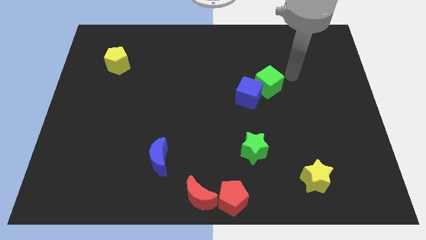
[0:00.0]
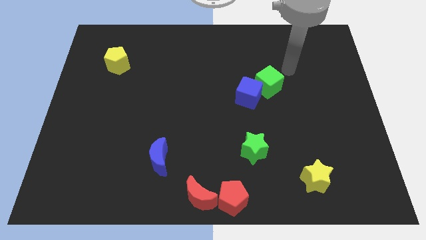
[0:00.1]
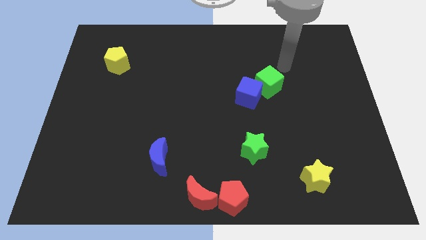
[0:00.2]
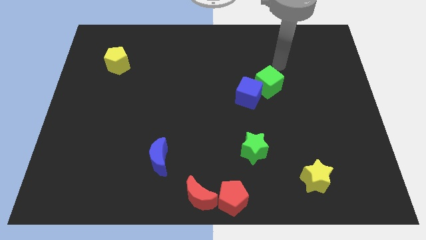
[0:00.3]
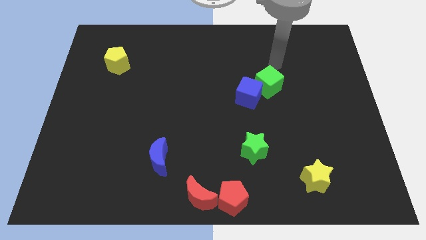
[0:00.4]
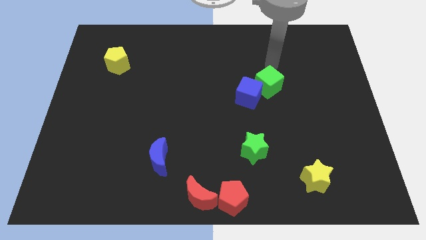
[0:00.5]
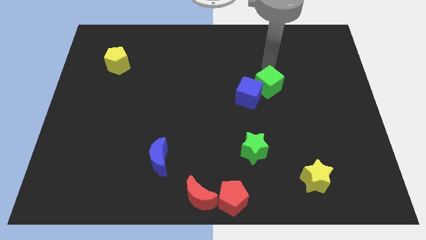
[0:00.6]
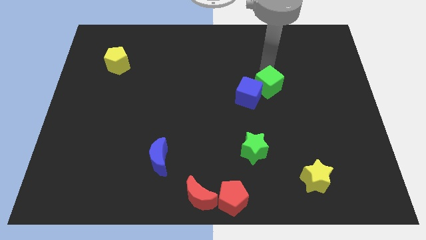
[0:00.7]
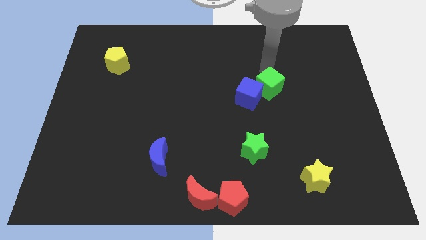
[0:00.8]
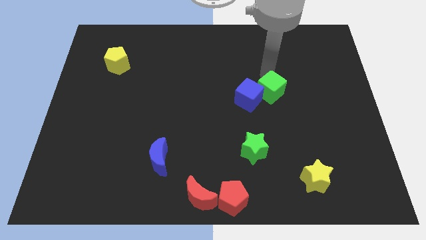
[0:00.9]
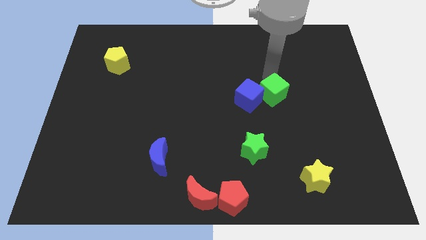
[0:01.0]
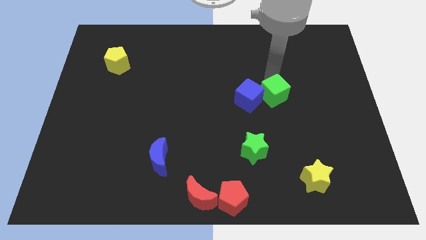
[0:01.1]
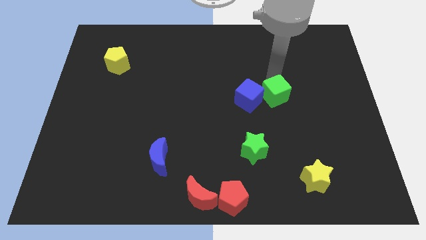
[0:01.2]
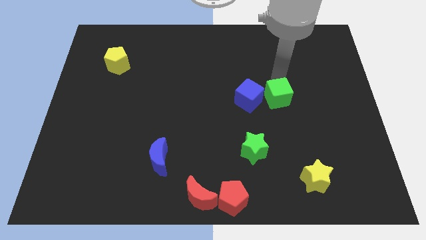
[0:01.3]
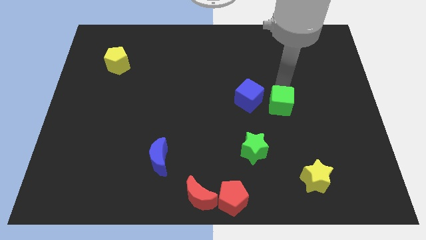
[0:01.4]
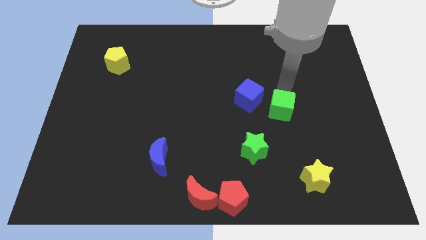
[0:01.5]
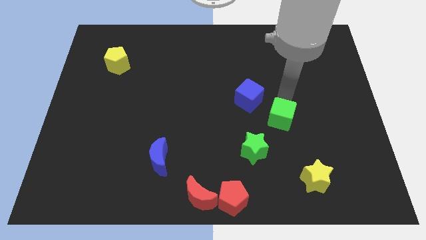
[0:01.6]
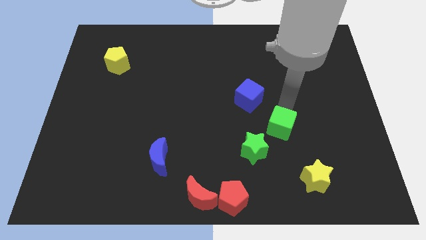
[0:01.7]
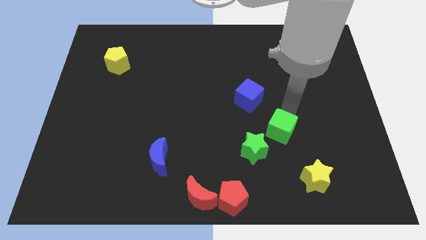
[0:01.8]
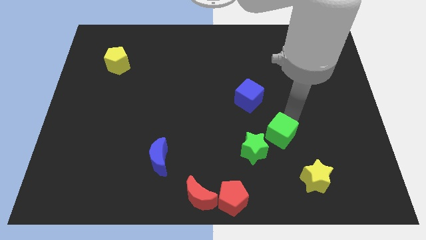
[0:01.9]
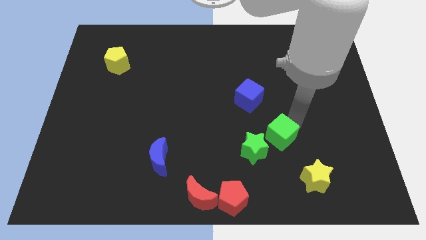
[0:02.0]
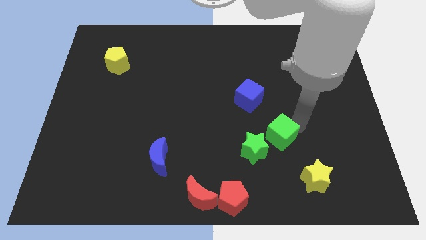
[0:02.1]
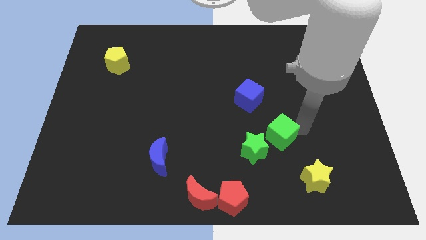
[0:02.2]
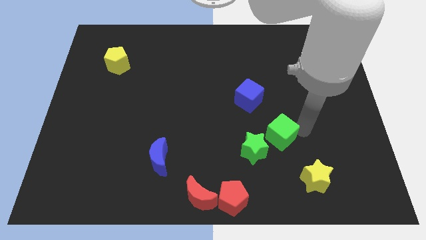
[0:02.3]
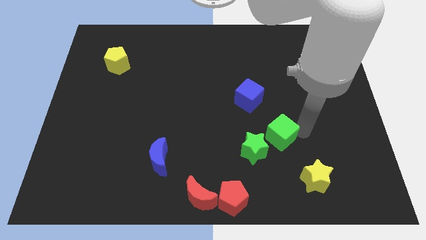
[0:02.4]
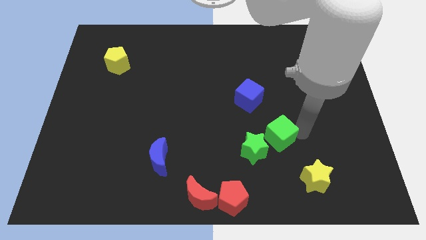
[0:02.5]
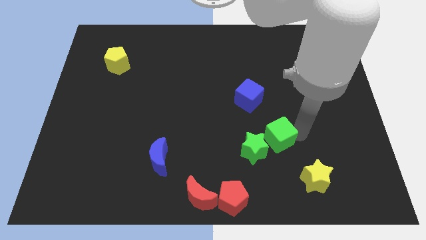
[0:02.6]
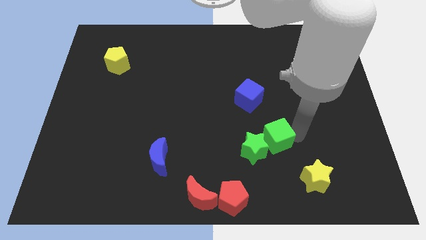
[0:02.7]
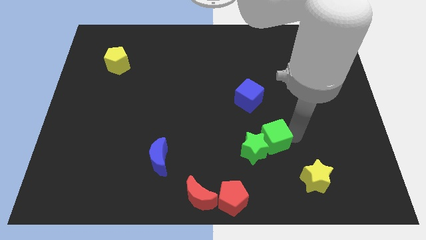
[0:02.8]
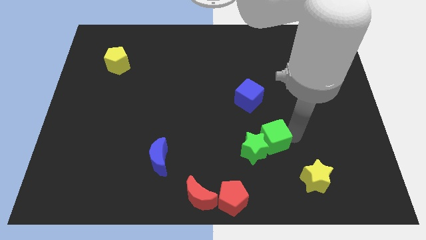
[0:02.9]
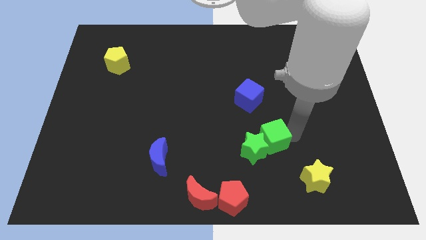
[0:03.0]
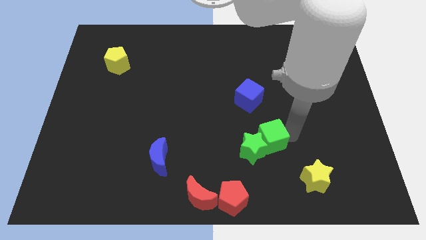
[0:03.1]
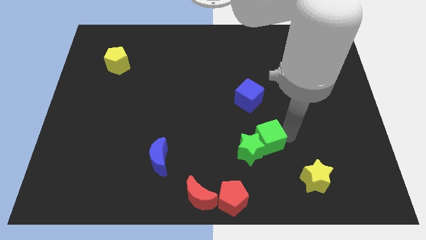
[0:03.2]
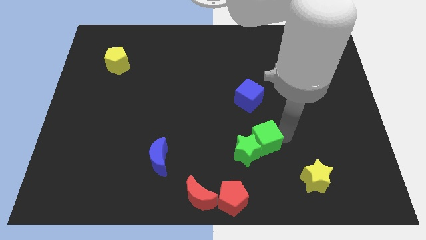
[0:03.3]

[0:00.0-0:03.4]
push the green cube into the green star

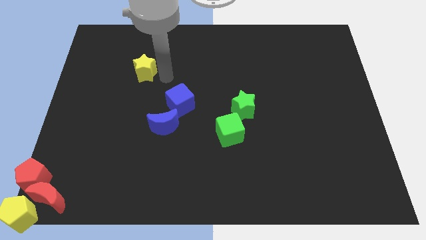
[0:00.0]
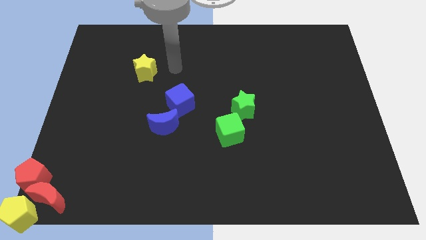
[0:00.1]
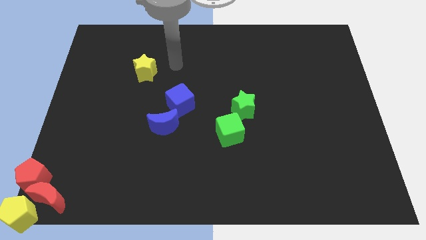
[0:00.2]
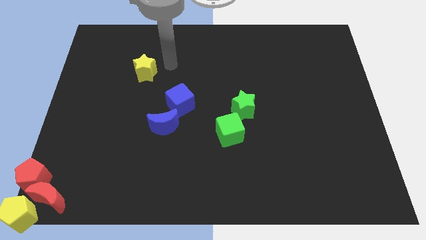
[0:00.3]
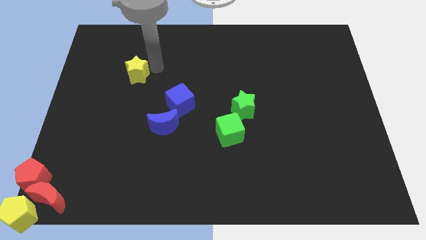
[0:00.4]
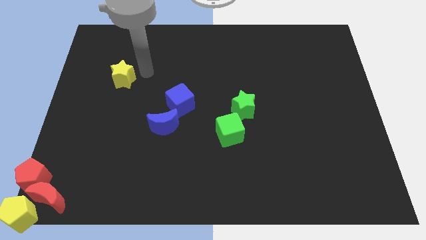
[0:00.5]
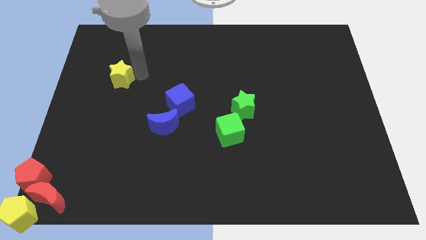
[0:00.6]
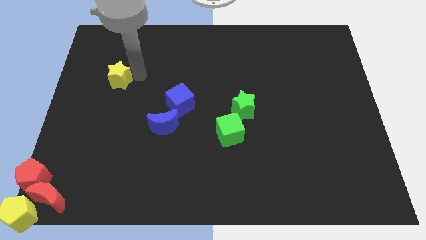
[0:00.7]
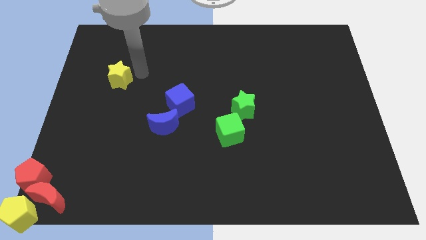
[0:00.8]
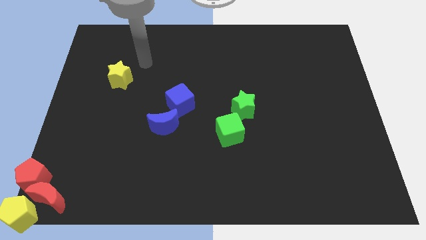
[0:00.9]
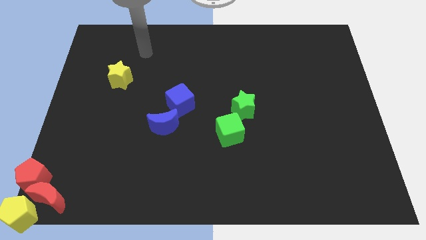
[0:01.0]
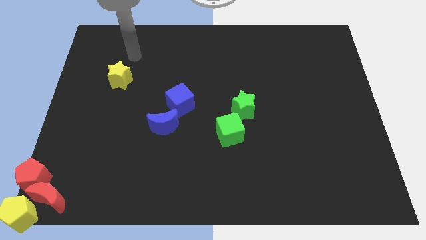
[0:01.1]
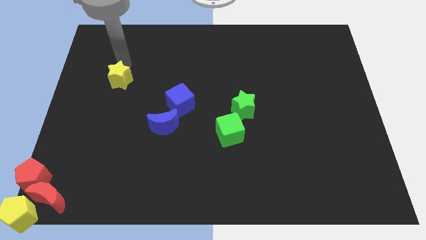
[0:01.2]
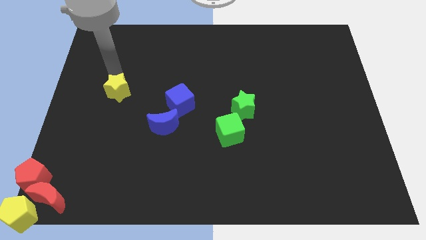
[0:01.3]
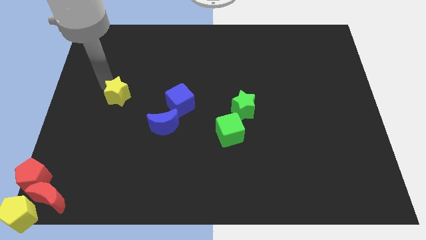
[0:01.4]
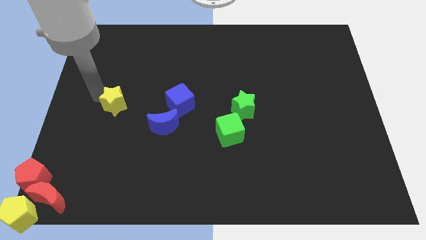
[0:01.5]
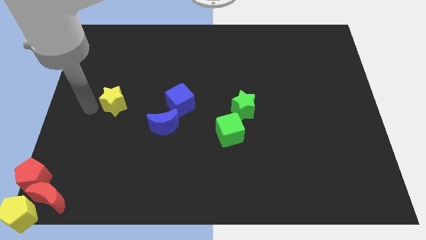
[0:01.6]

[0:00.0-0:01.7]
move the yellow star to the left of the blue cube

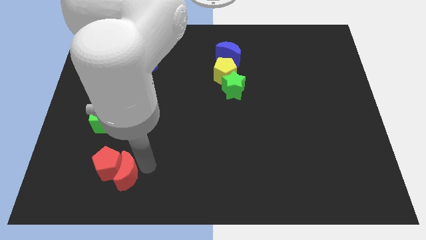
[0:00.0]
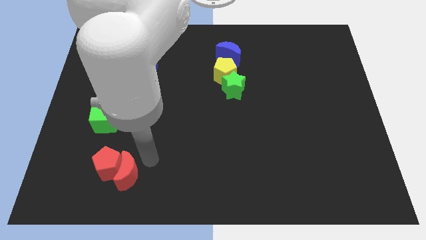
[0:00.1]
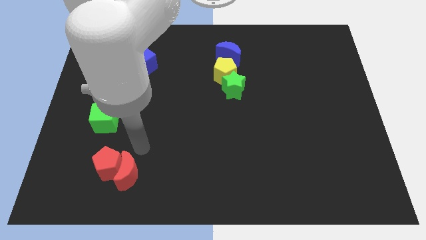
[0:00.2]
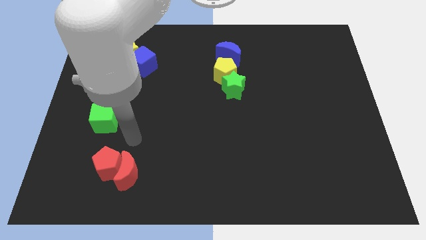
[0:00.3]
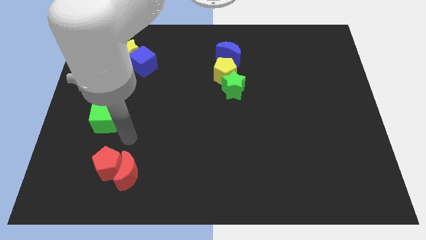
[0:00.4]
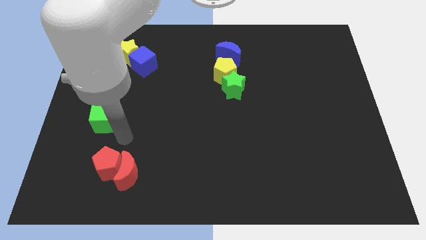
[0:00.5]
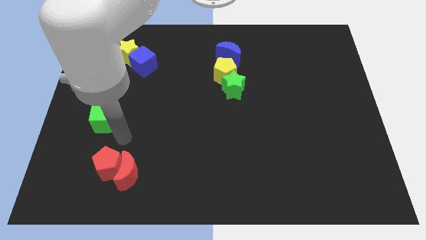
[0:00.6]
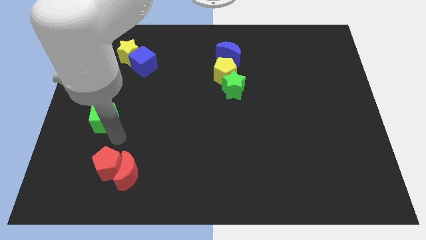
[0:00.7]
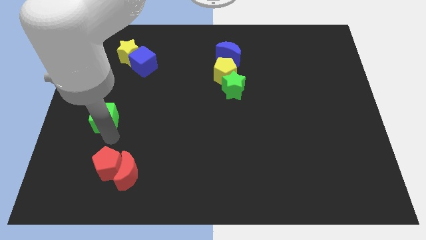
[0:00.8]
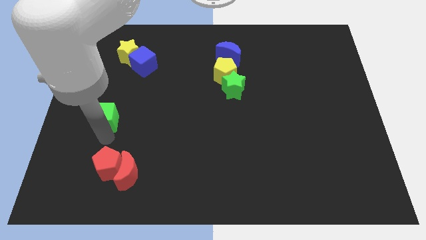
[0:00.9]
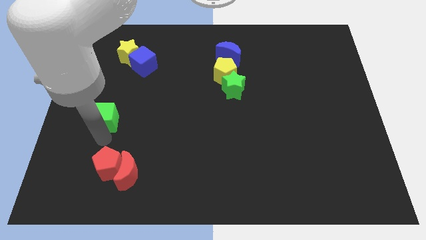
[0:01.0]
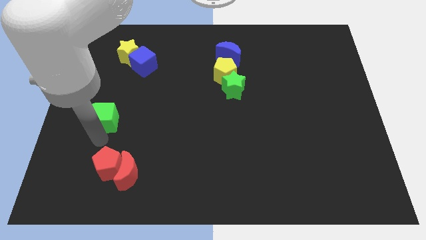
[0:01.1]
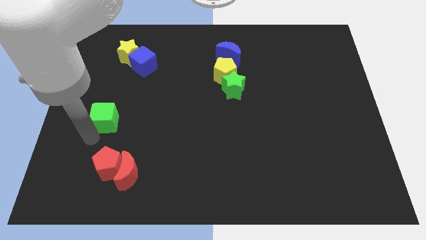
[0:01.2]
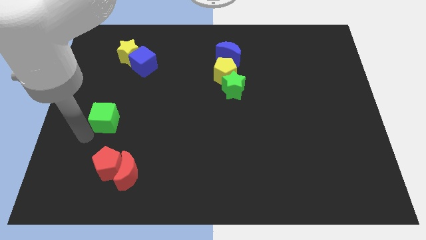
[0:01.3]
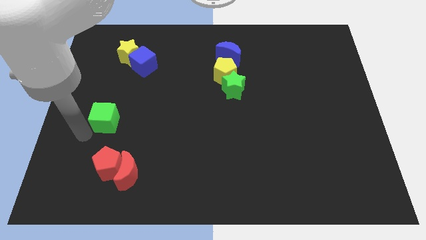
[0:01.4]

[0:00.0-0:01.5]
touch the green cube at the bottom side

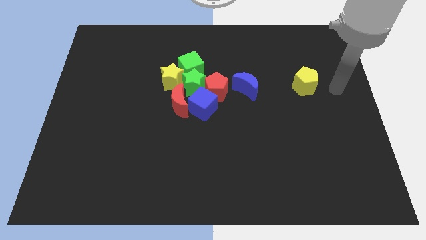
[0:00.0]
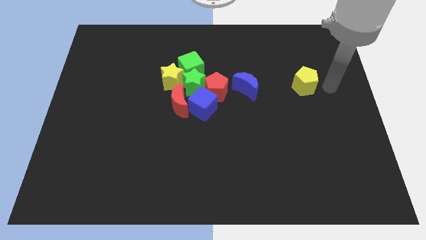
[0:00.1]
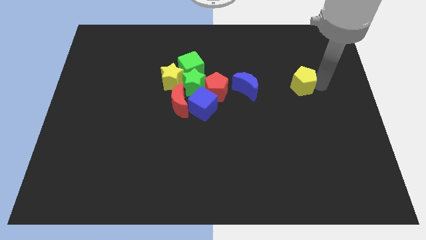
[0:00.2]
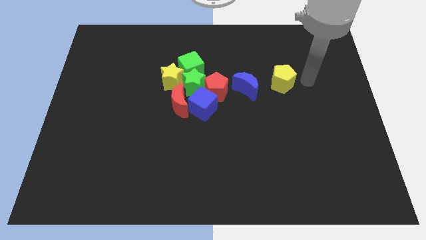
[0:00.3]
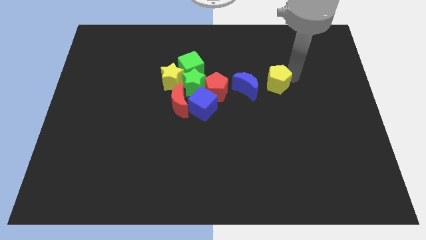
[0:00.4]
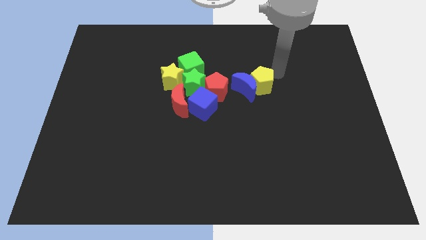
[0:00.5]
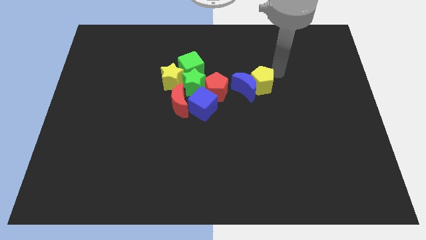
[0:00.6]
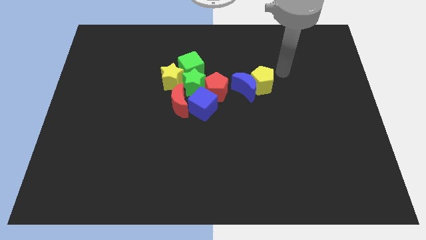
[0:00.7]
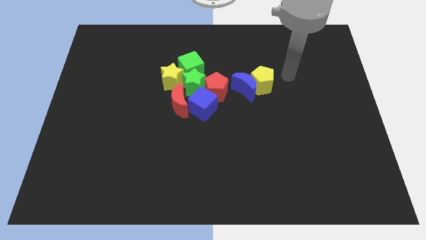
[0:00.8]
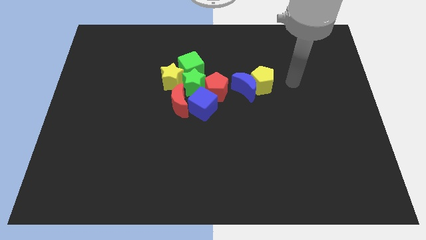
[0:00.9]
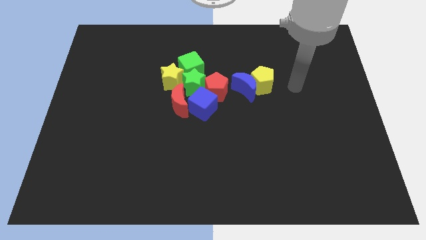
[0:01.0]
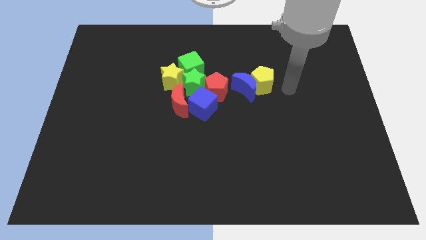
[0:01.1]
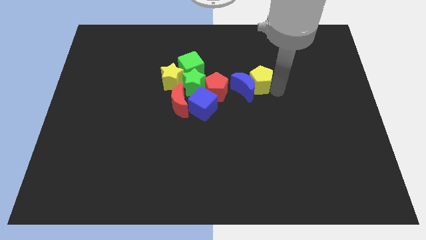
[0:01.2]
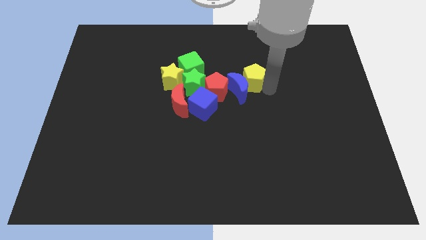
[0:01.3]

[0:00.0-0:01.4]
push the yellow pentagon into the right of the blue moon

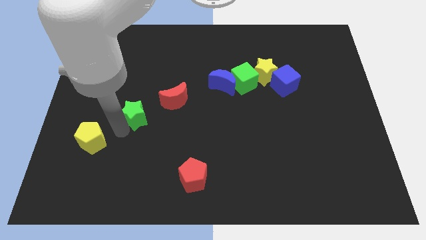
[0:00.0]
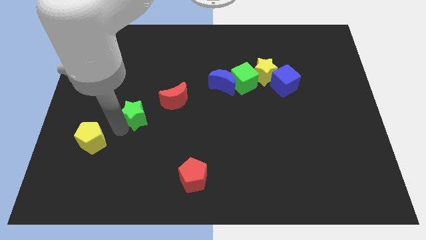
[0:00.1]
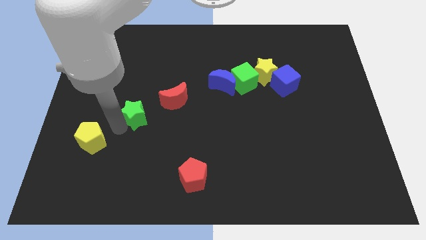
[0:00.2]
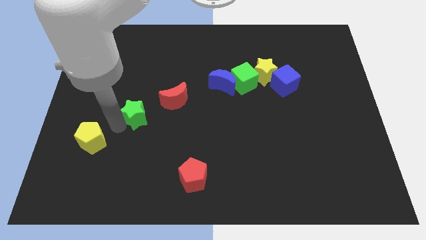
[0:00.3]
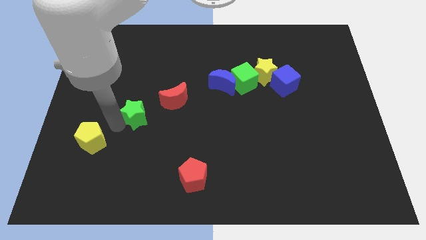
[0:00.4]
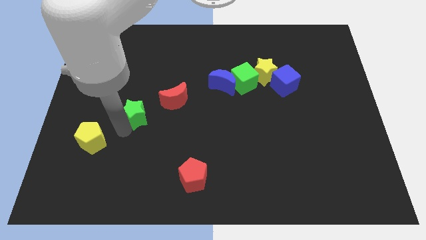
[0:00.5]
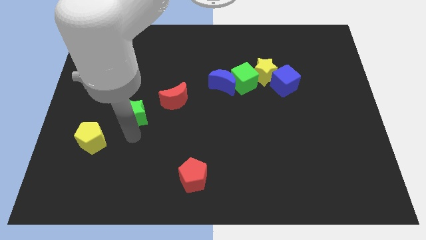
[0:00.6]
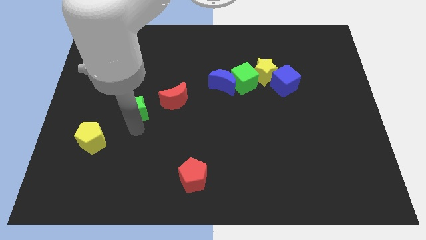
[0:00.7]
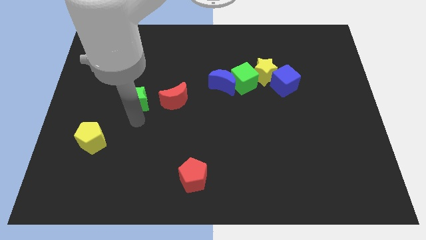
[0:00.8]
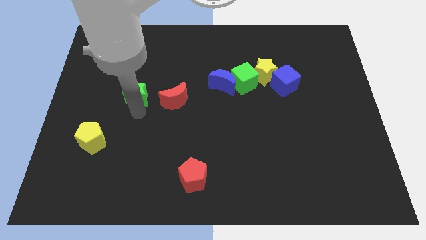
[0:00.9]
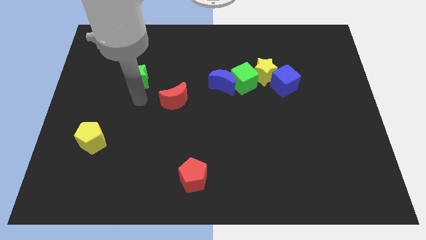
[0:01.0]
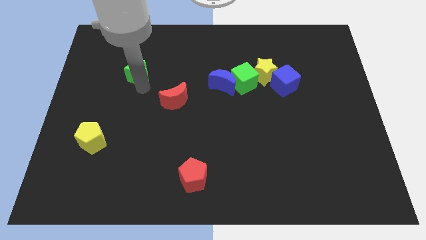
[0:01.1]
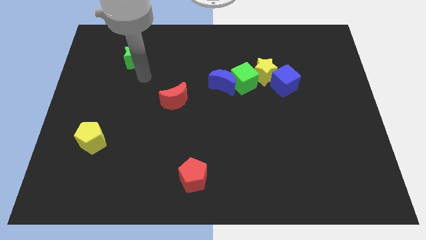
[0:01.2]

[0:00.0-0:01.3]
place green star to the top left of red moon
